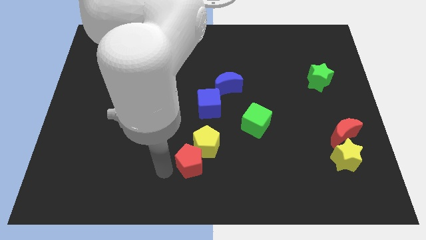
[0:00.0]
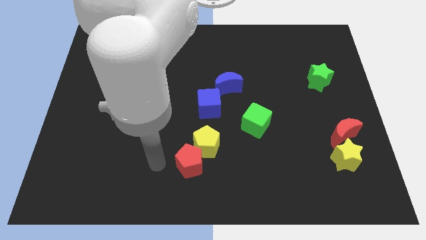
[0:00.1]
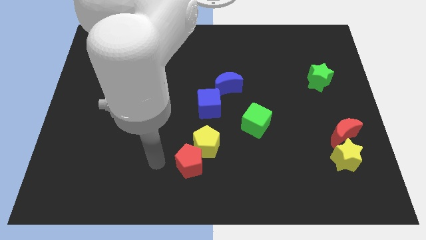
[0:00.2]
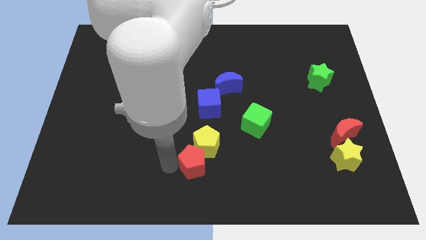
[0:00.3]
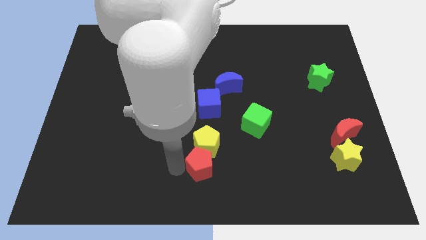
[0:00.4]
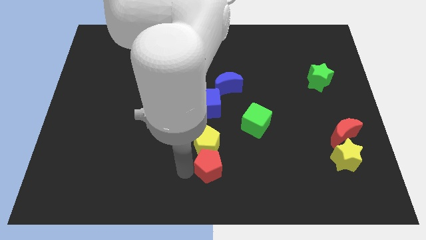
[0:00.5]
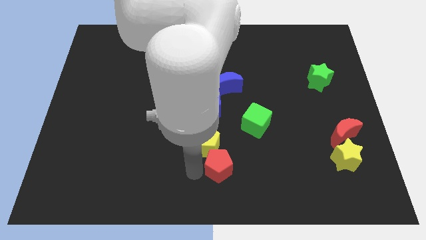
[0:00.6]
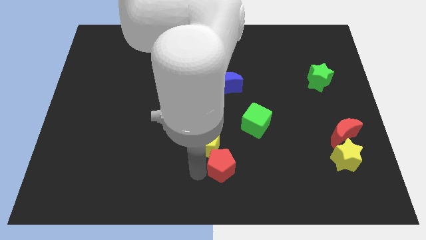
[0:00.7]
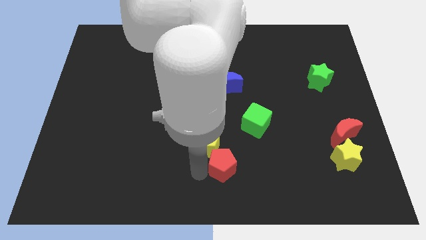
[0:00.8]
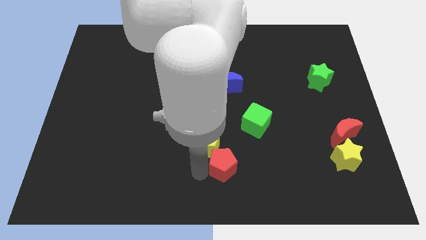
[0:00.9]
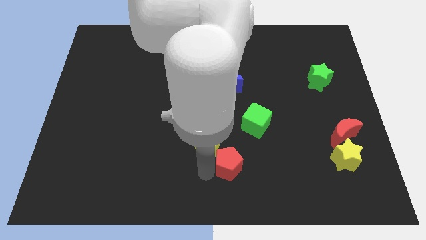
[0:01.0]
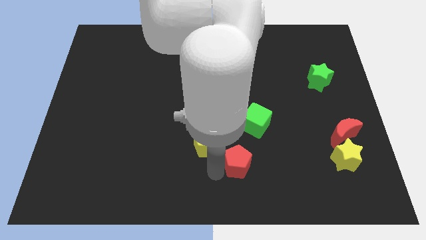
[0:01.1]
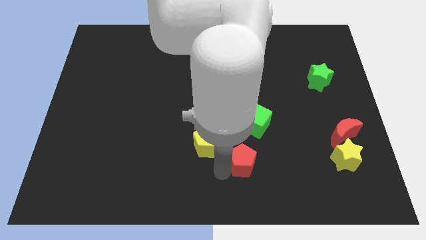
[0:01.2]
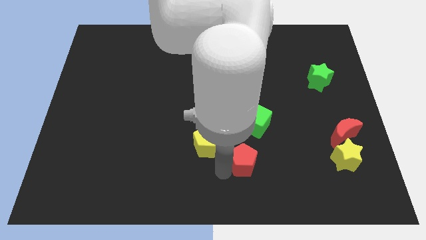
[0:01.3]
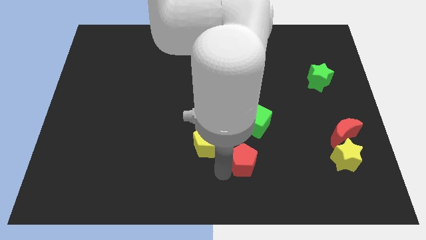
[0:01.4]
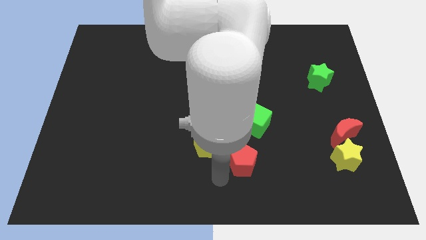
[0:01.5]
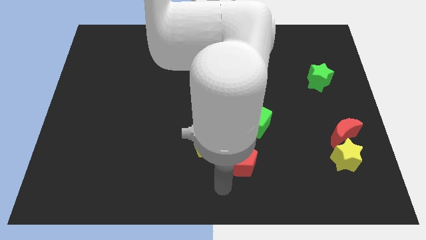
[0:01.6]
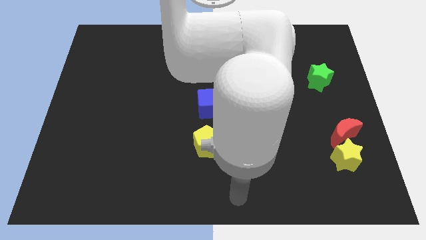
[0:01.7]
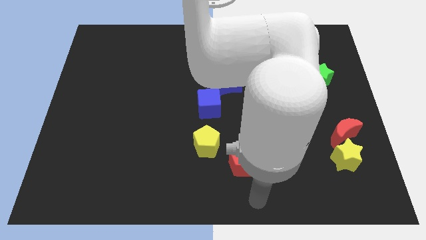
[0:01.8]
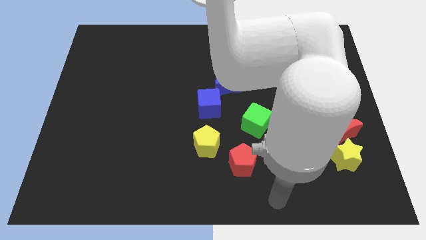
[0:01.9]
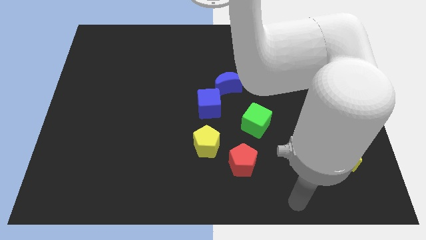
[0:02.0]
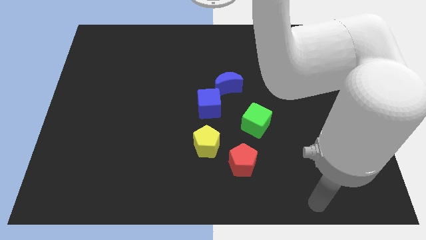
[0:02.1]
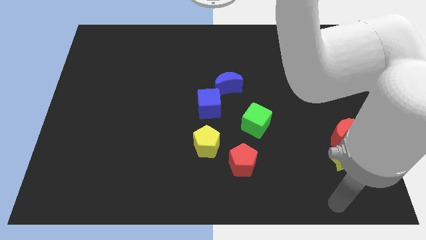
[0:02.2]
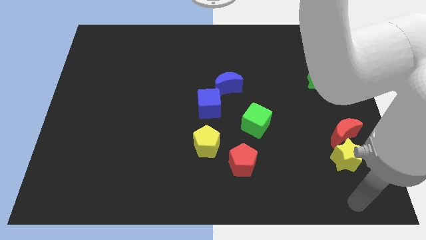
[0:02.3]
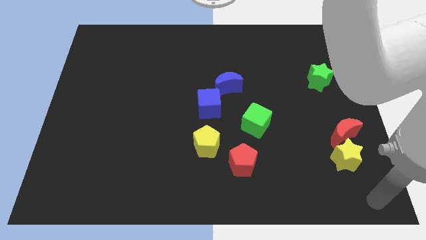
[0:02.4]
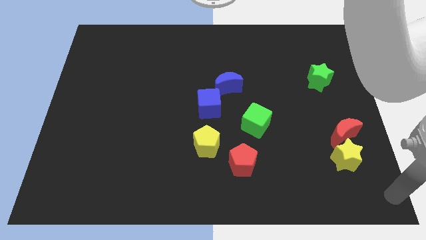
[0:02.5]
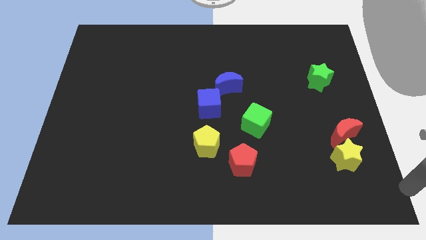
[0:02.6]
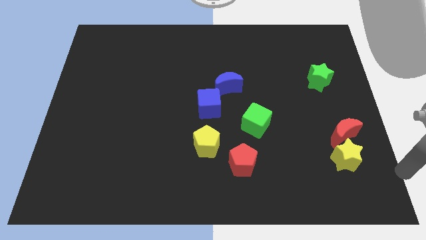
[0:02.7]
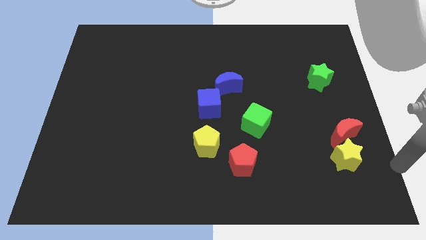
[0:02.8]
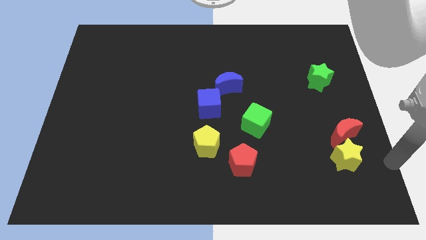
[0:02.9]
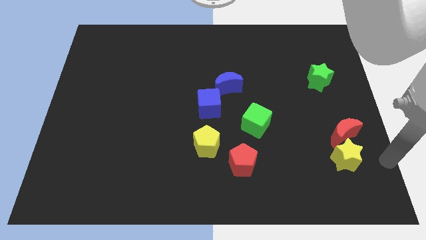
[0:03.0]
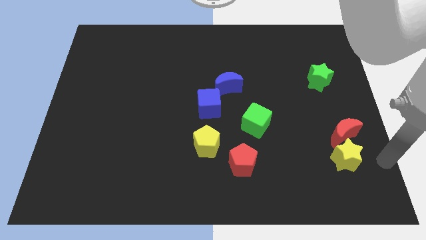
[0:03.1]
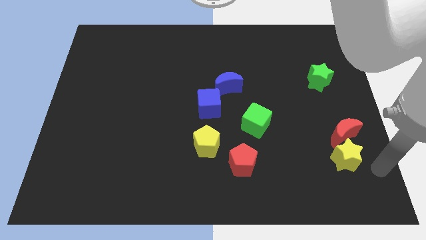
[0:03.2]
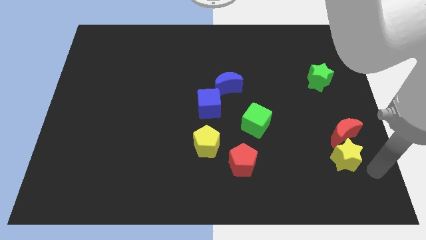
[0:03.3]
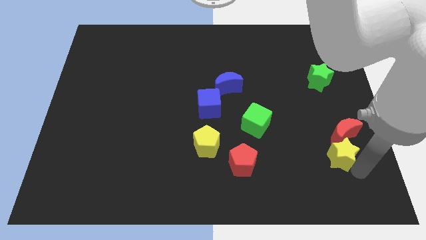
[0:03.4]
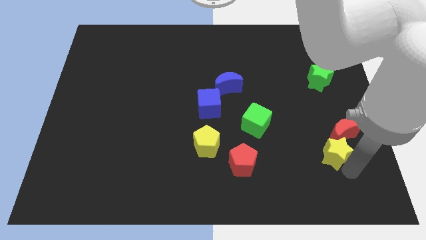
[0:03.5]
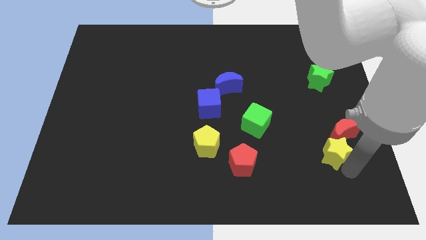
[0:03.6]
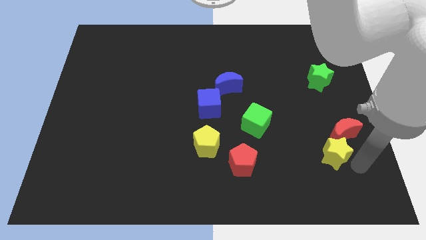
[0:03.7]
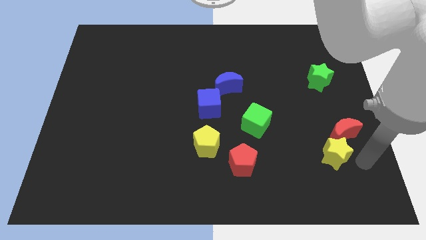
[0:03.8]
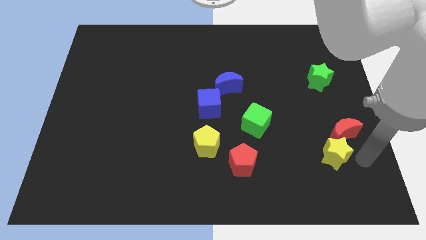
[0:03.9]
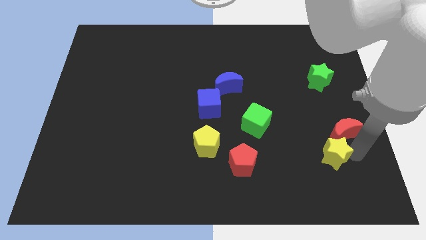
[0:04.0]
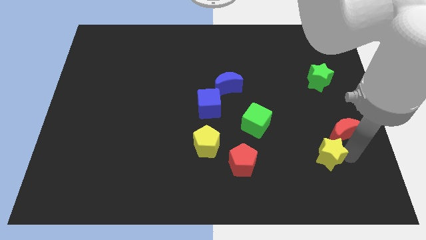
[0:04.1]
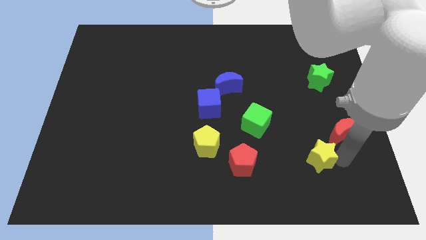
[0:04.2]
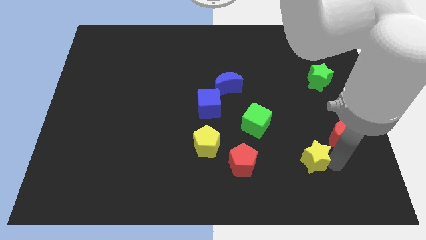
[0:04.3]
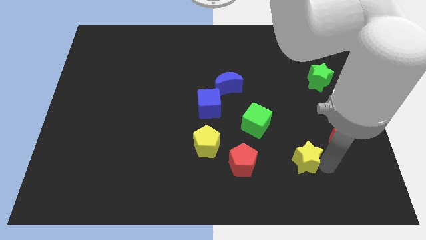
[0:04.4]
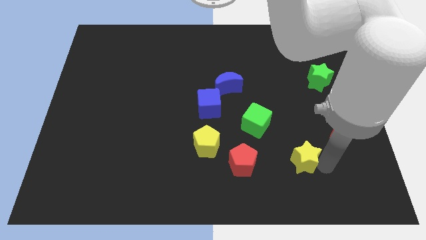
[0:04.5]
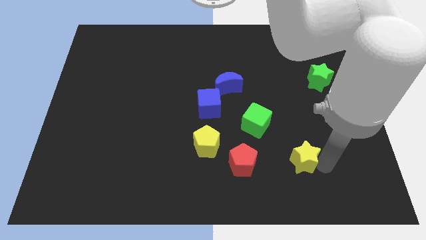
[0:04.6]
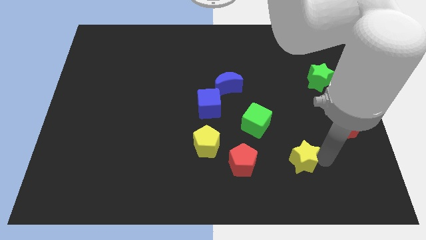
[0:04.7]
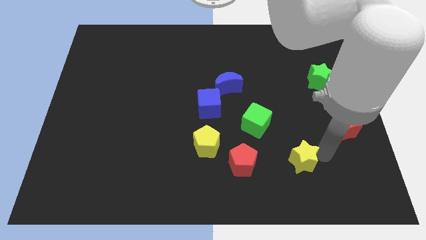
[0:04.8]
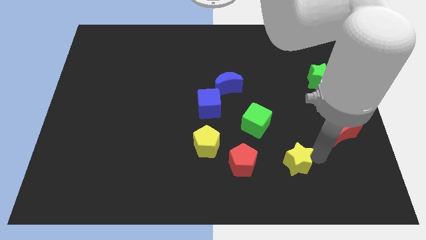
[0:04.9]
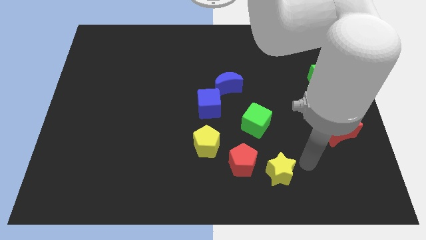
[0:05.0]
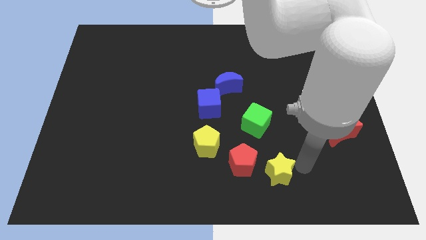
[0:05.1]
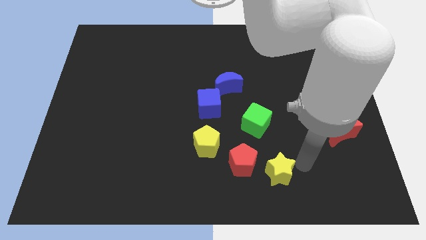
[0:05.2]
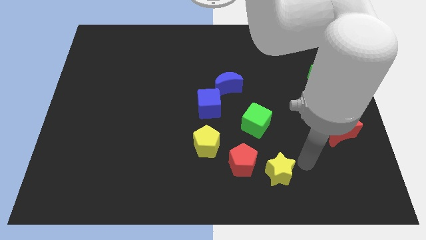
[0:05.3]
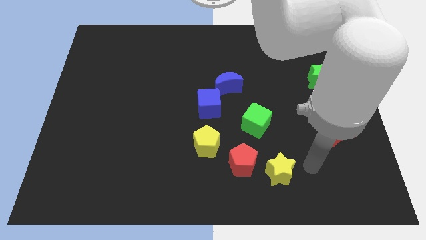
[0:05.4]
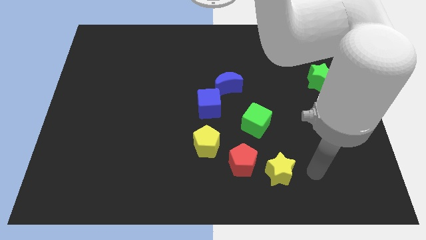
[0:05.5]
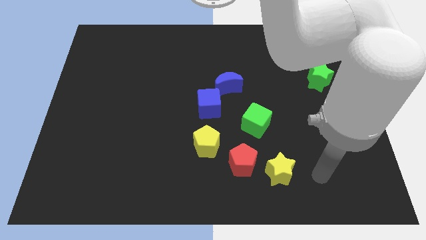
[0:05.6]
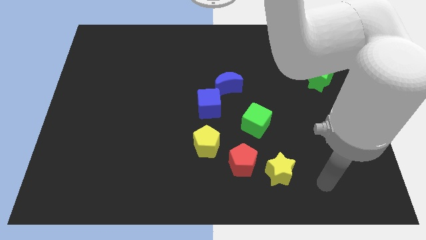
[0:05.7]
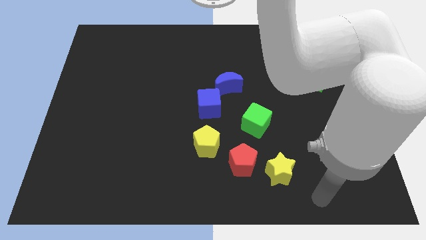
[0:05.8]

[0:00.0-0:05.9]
place the red pentagon and yellow star diagonally at the bottom right of the yellow pentagon

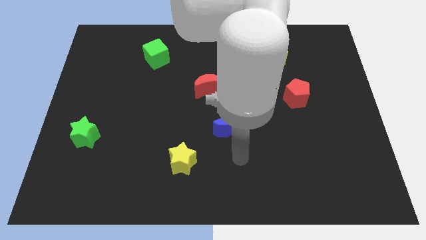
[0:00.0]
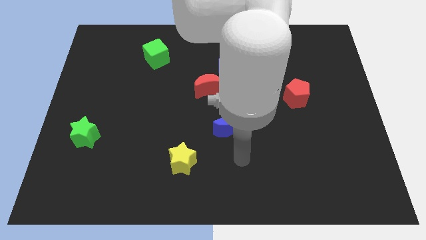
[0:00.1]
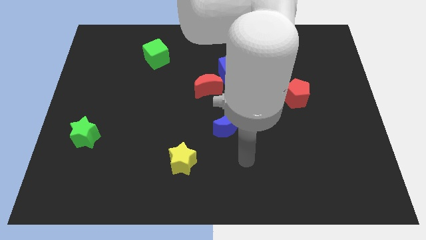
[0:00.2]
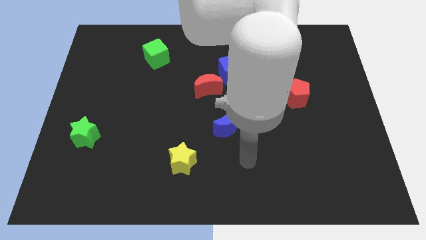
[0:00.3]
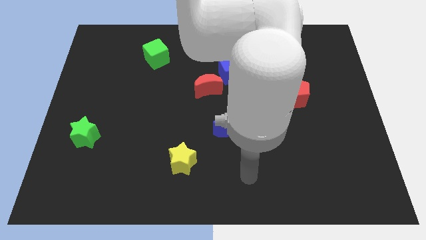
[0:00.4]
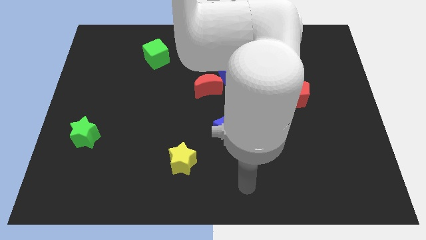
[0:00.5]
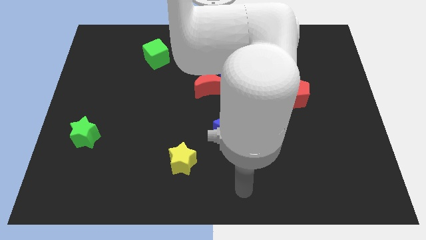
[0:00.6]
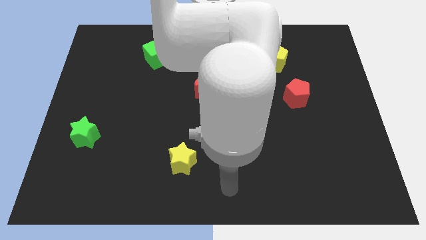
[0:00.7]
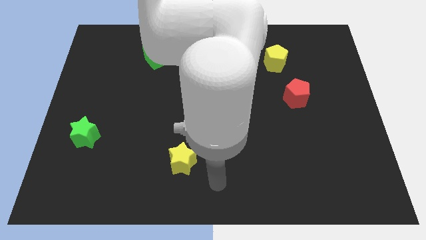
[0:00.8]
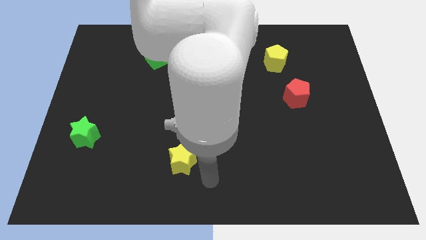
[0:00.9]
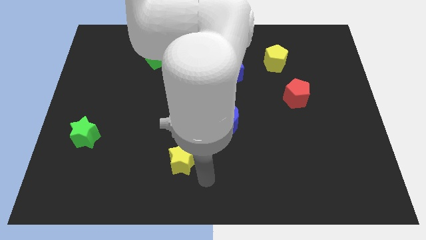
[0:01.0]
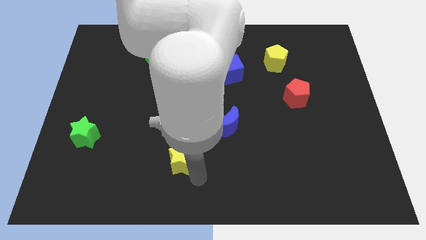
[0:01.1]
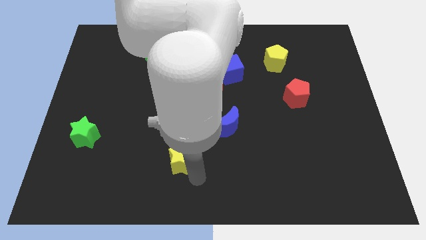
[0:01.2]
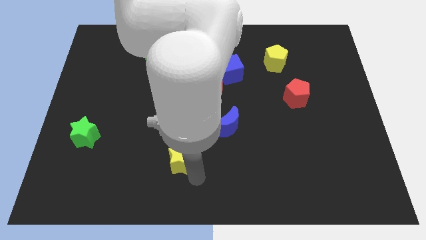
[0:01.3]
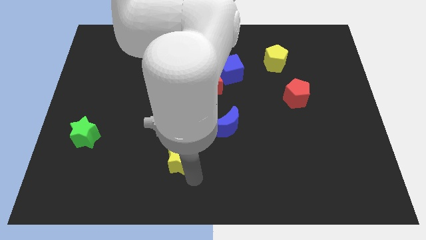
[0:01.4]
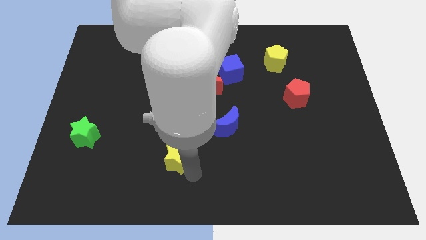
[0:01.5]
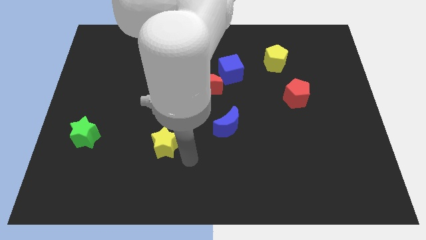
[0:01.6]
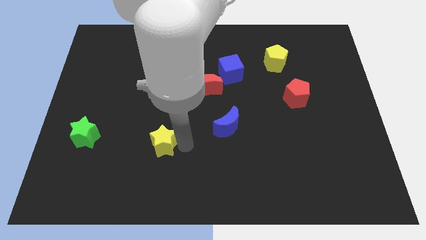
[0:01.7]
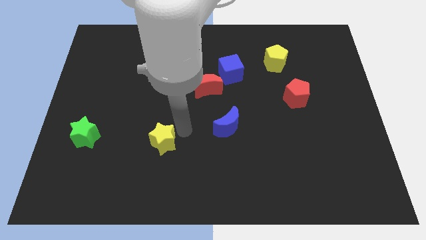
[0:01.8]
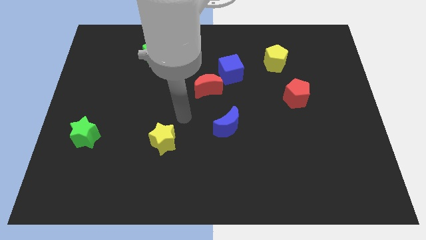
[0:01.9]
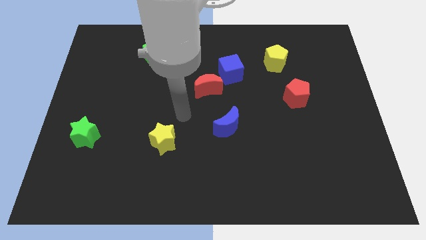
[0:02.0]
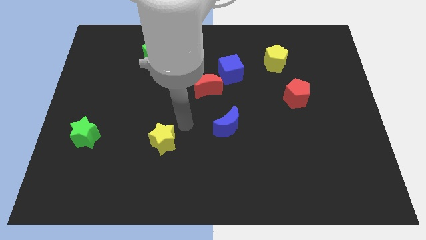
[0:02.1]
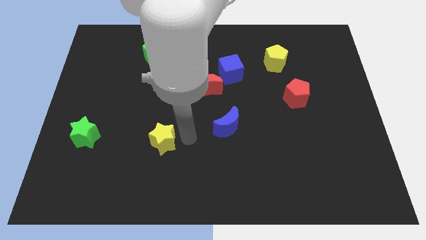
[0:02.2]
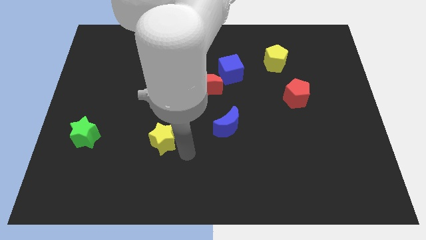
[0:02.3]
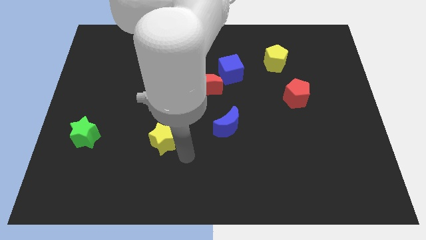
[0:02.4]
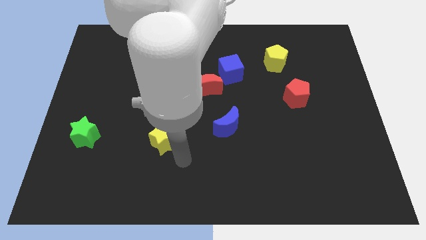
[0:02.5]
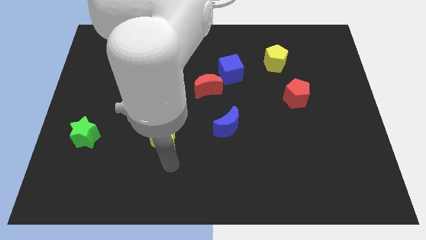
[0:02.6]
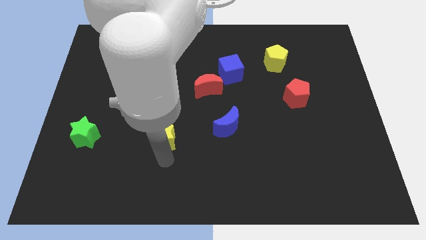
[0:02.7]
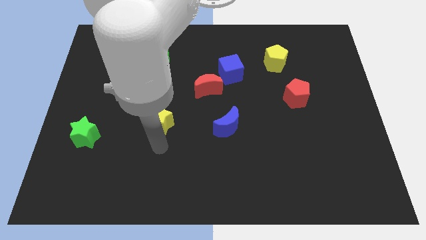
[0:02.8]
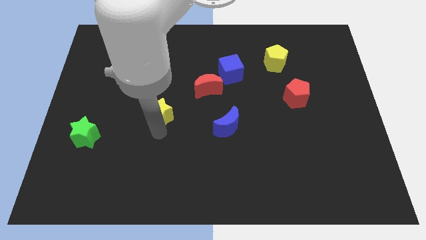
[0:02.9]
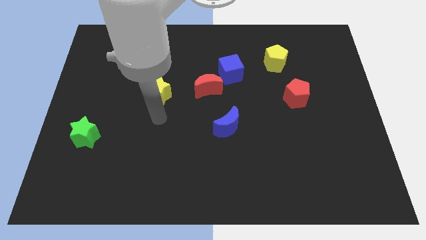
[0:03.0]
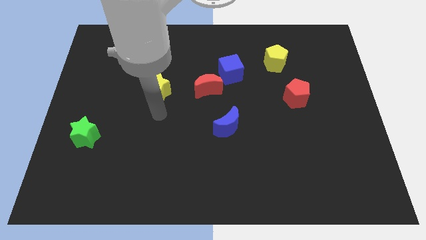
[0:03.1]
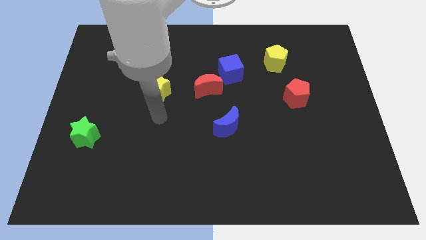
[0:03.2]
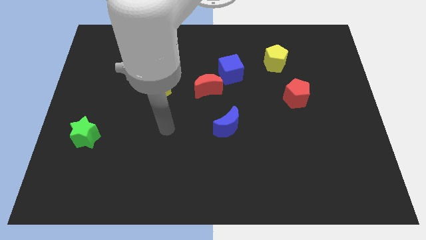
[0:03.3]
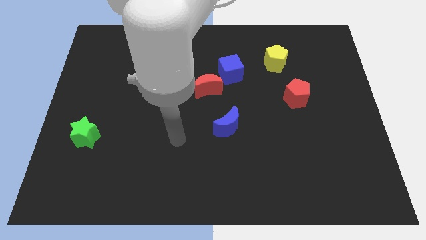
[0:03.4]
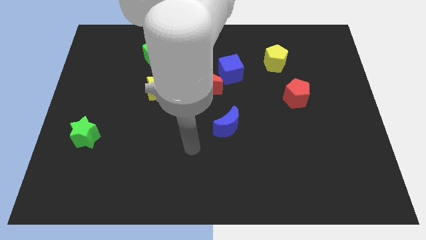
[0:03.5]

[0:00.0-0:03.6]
slide the yellow star to the bottom side of the green cube
